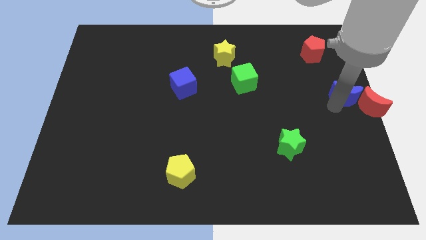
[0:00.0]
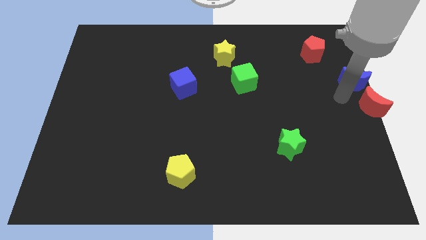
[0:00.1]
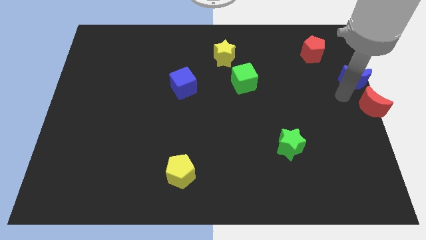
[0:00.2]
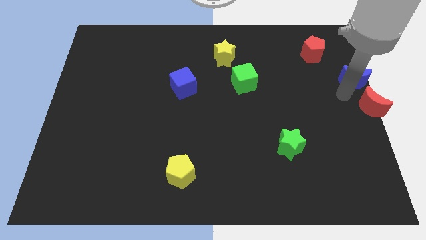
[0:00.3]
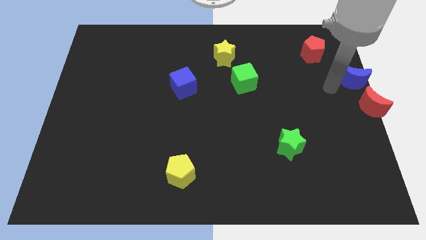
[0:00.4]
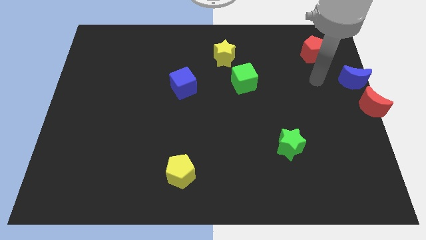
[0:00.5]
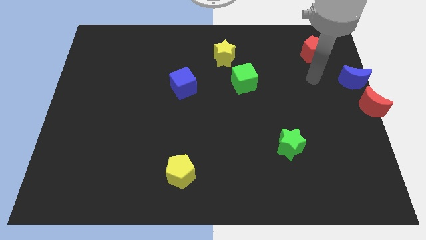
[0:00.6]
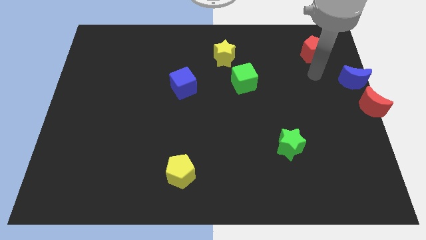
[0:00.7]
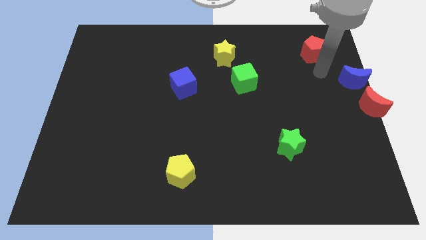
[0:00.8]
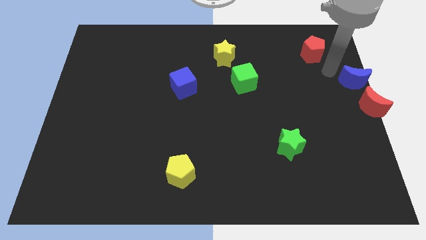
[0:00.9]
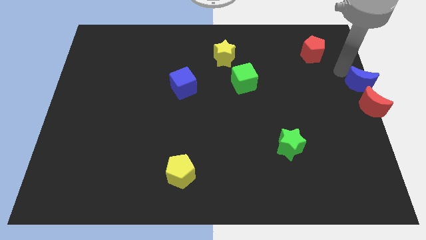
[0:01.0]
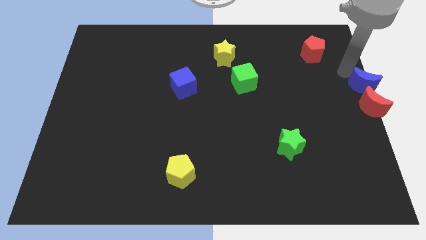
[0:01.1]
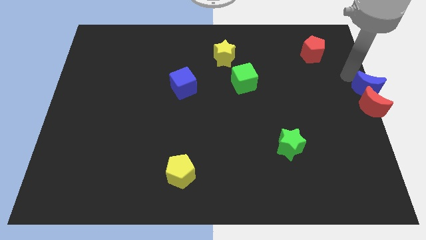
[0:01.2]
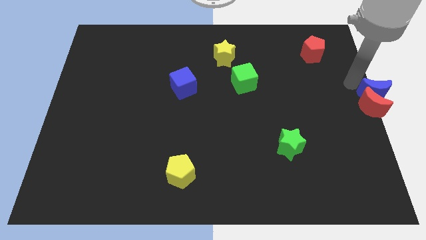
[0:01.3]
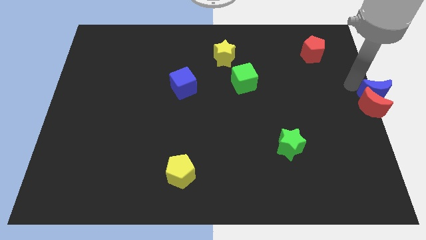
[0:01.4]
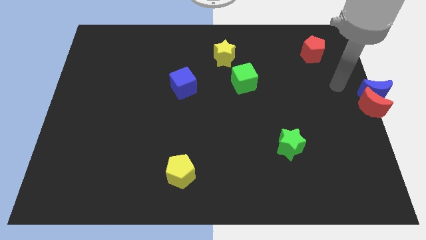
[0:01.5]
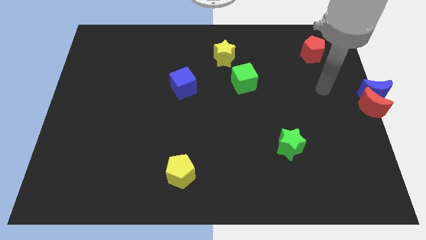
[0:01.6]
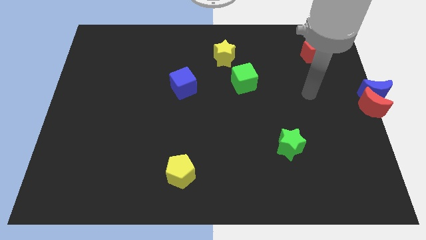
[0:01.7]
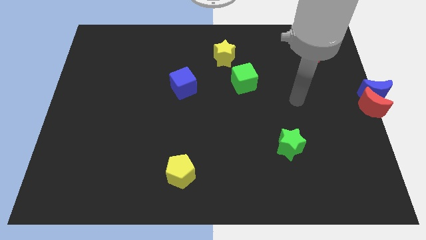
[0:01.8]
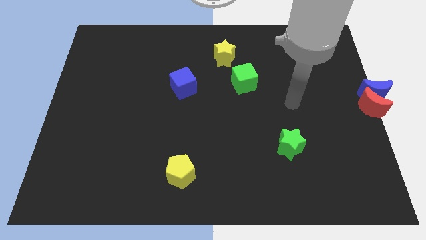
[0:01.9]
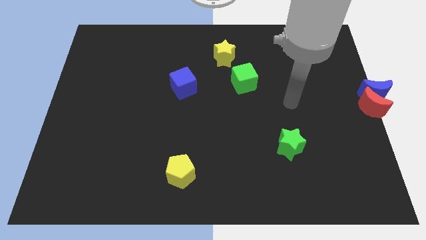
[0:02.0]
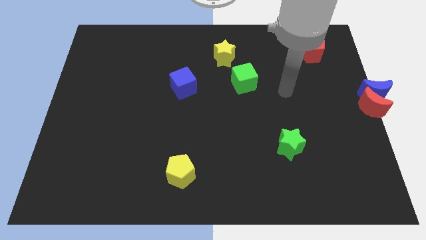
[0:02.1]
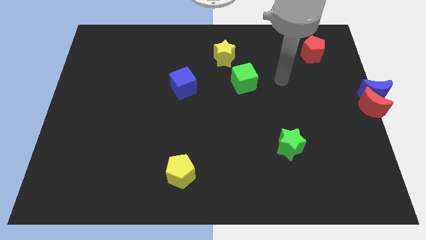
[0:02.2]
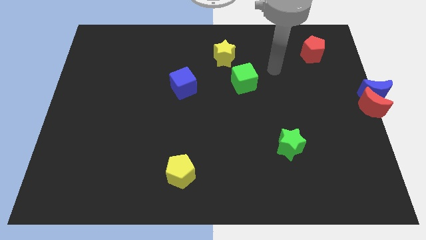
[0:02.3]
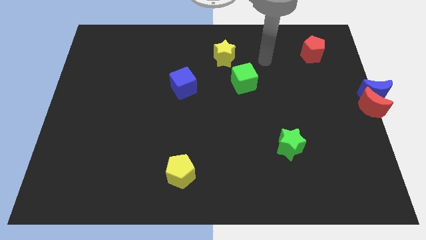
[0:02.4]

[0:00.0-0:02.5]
slide the blue moon above the red moon

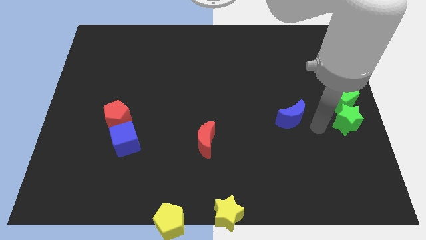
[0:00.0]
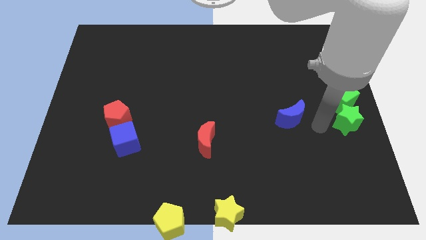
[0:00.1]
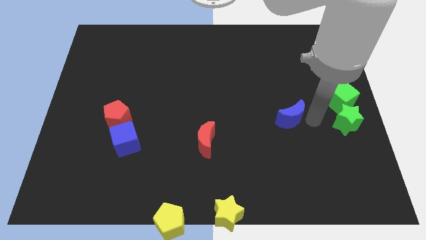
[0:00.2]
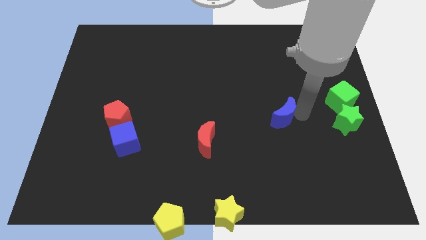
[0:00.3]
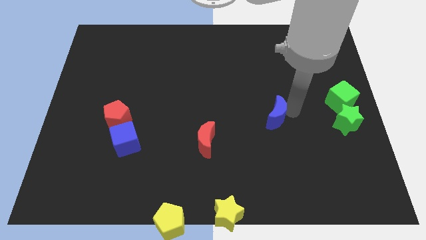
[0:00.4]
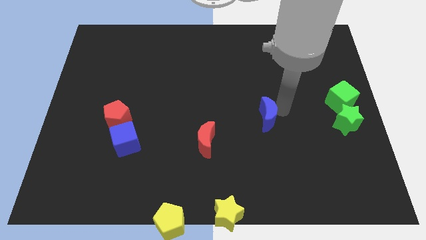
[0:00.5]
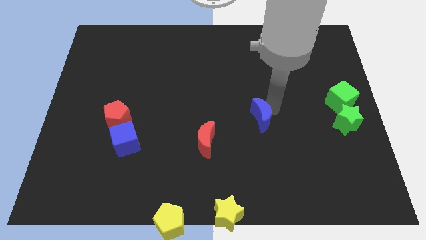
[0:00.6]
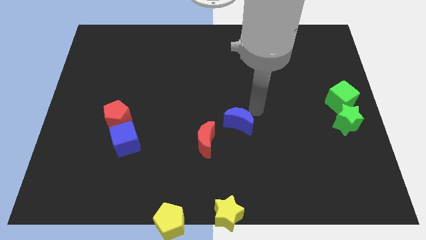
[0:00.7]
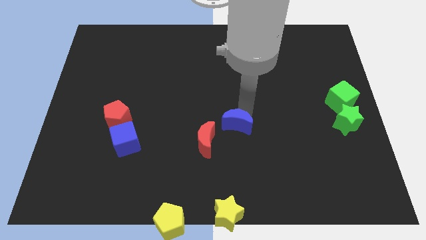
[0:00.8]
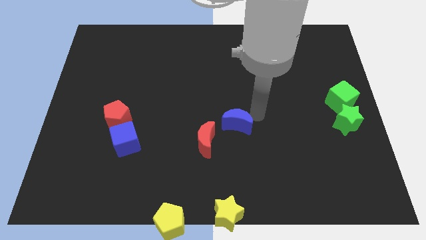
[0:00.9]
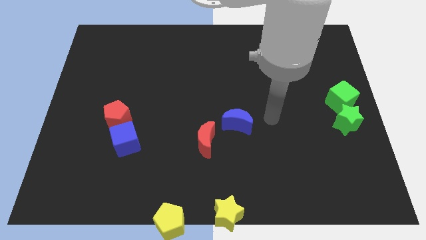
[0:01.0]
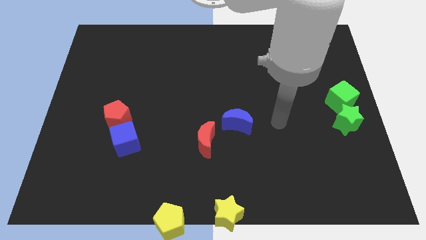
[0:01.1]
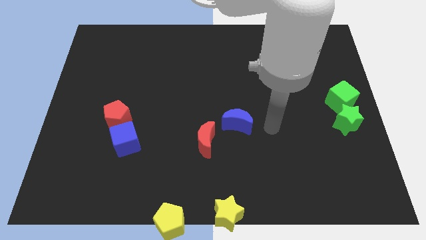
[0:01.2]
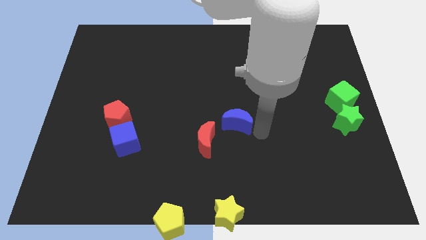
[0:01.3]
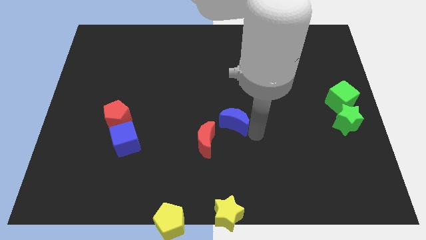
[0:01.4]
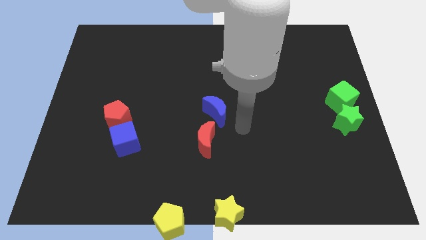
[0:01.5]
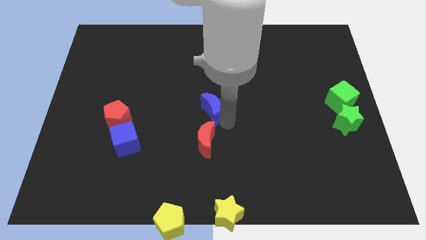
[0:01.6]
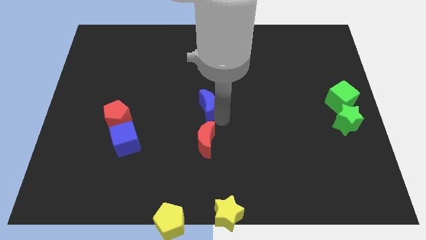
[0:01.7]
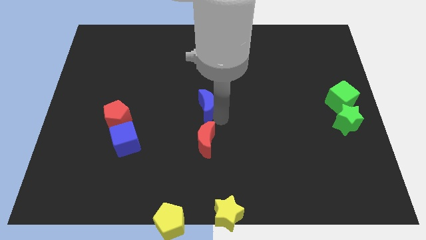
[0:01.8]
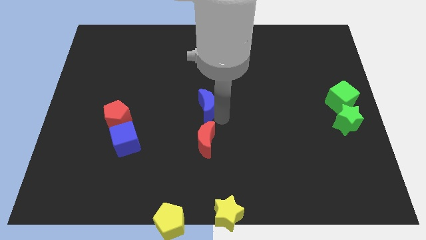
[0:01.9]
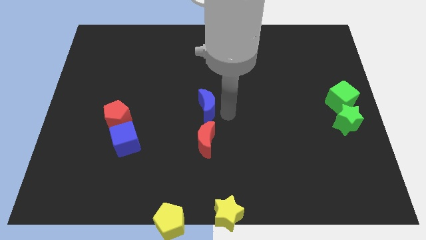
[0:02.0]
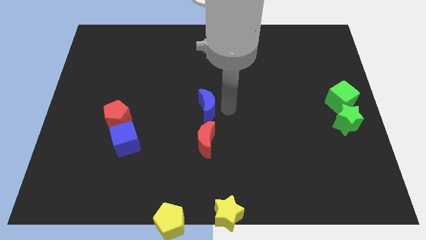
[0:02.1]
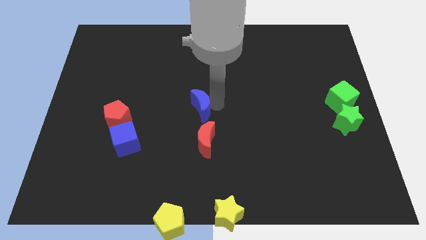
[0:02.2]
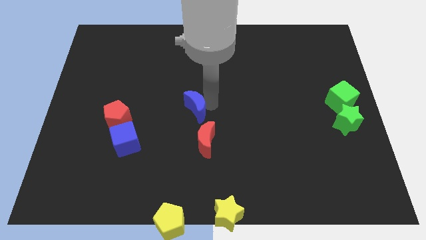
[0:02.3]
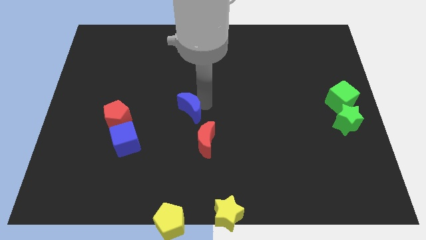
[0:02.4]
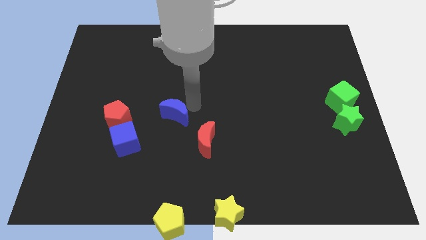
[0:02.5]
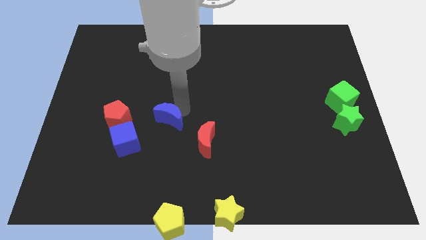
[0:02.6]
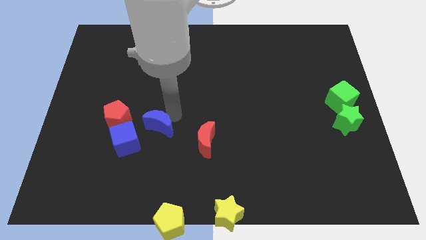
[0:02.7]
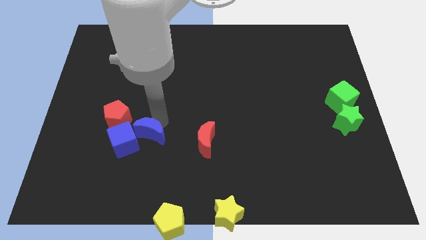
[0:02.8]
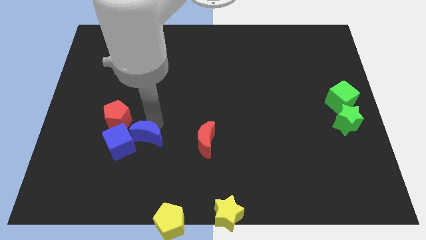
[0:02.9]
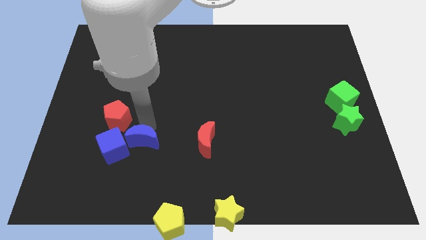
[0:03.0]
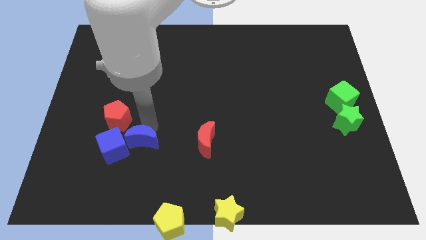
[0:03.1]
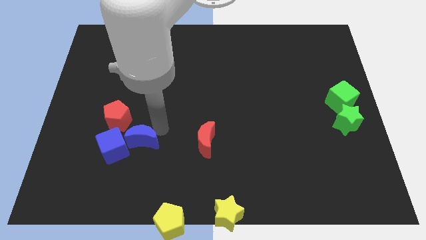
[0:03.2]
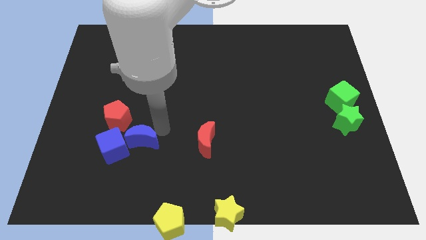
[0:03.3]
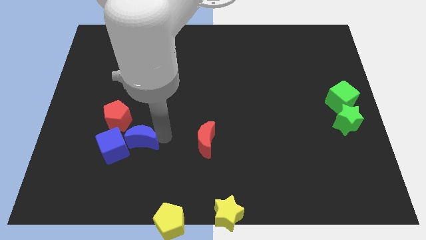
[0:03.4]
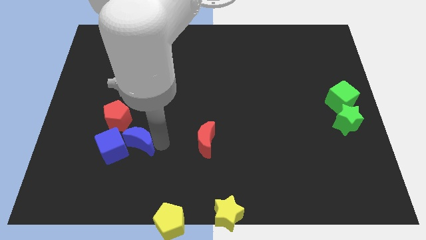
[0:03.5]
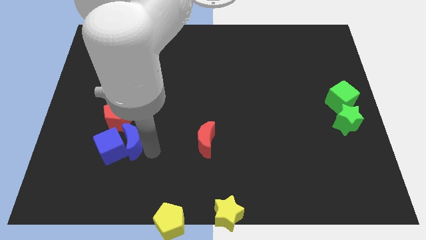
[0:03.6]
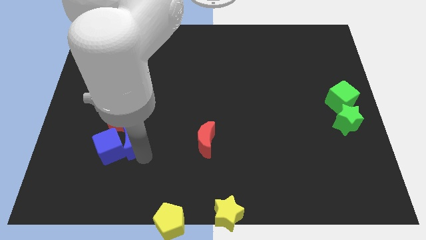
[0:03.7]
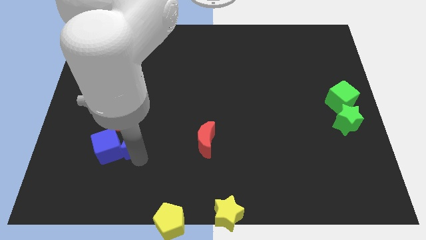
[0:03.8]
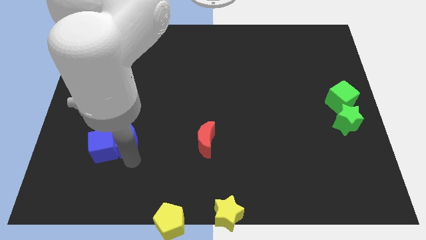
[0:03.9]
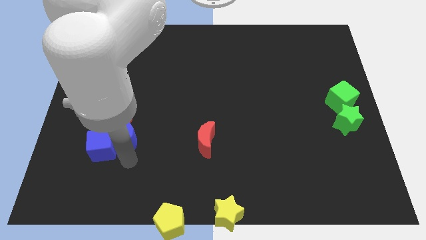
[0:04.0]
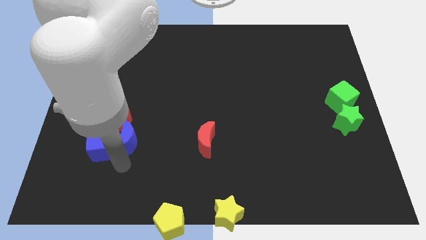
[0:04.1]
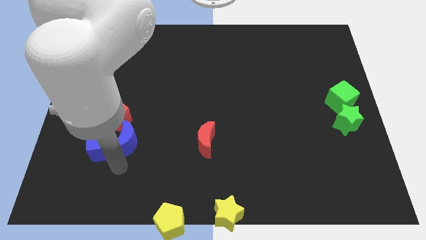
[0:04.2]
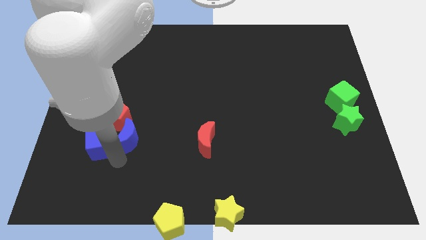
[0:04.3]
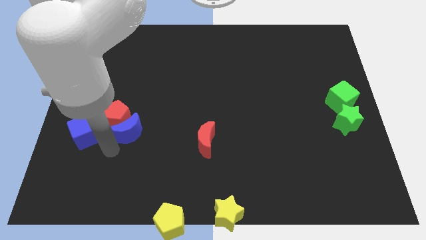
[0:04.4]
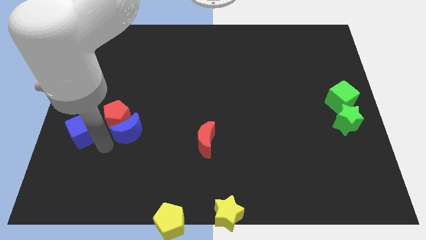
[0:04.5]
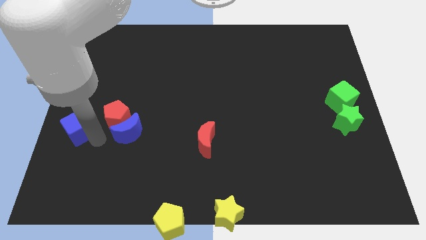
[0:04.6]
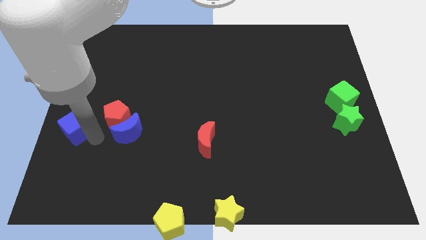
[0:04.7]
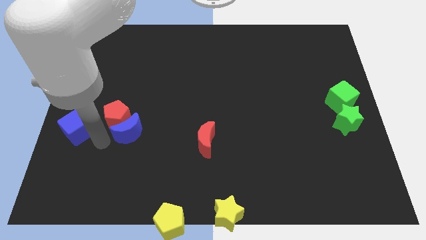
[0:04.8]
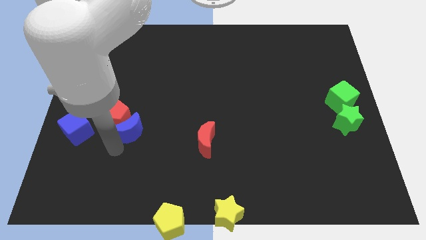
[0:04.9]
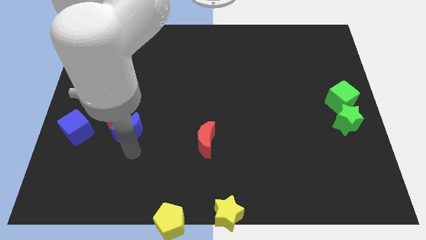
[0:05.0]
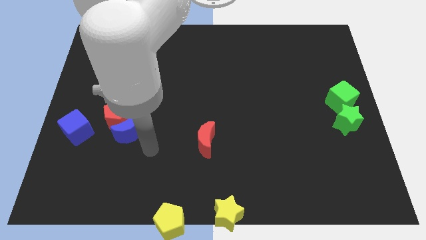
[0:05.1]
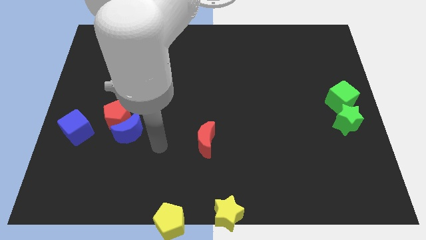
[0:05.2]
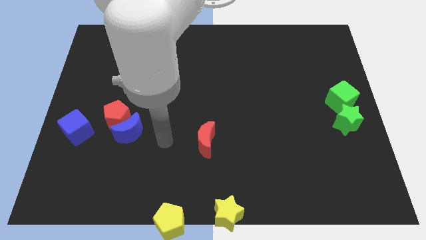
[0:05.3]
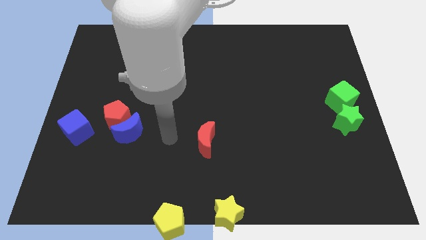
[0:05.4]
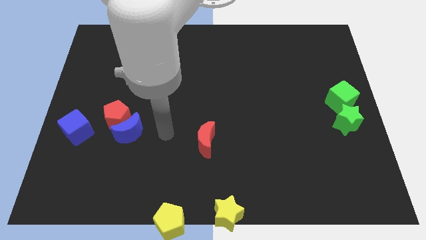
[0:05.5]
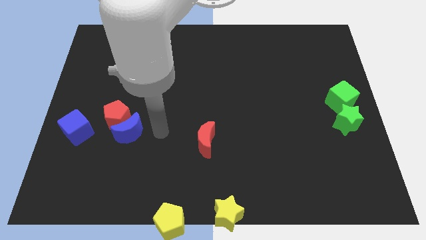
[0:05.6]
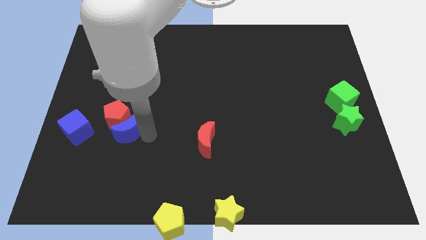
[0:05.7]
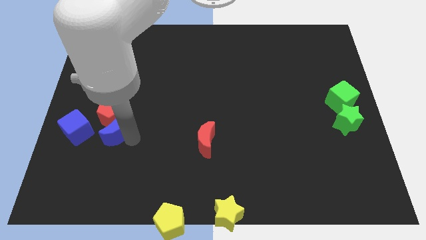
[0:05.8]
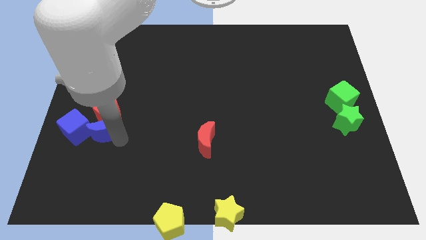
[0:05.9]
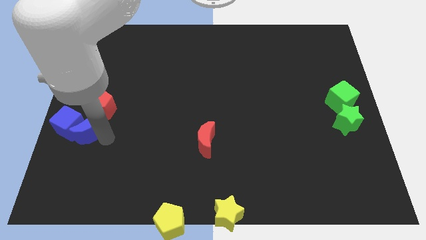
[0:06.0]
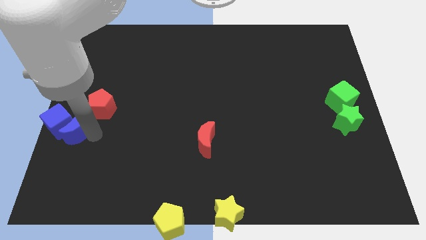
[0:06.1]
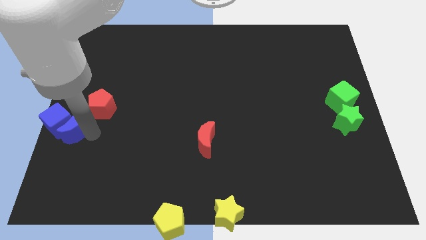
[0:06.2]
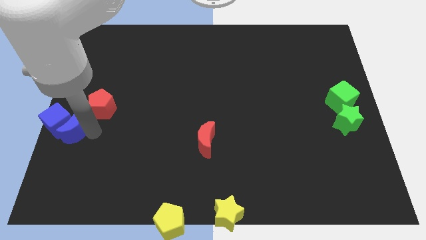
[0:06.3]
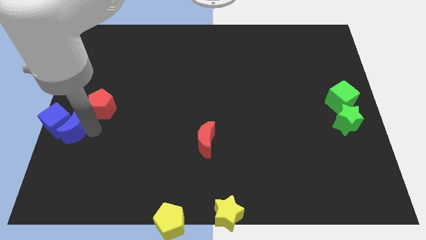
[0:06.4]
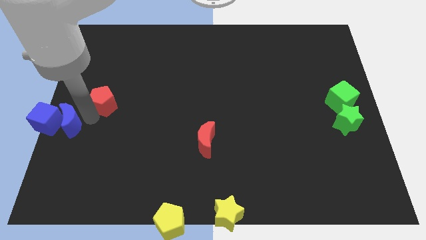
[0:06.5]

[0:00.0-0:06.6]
move the blue crescent and the blue cube towards the left center of the board
